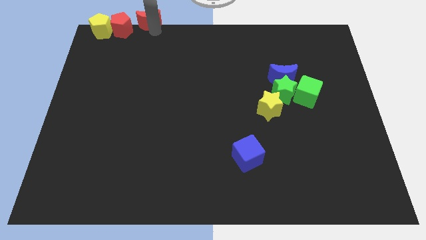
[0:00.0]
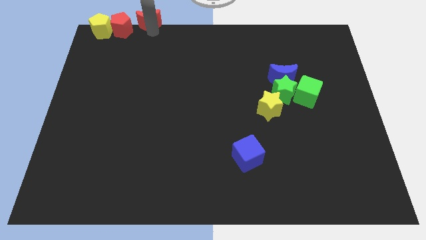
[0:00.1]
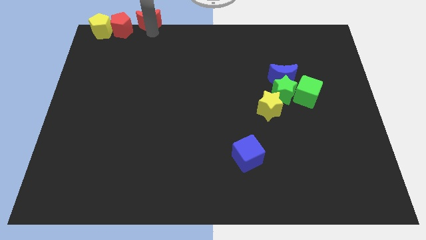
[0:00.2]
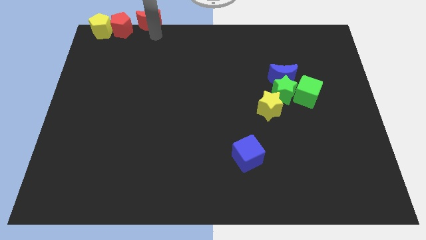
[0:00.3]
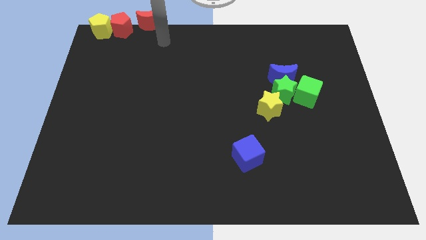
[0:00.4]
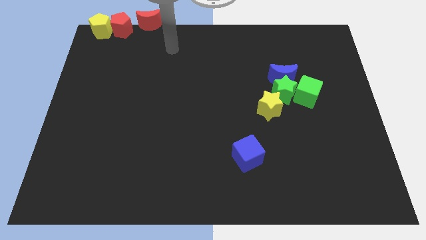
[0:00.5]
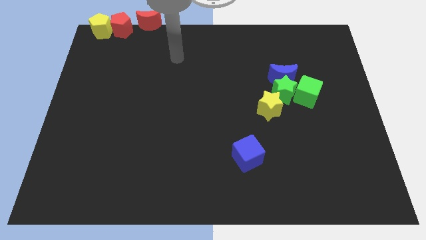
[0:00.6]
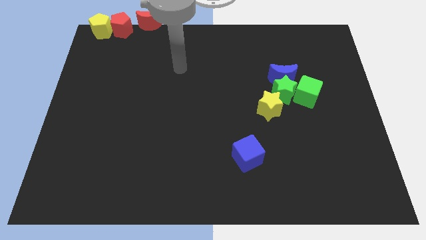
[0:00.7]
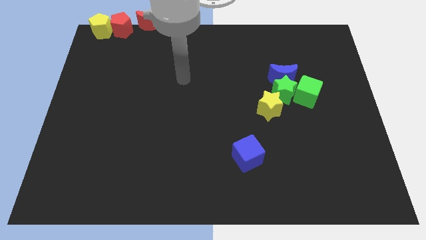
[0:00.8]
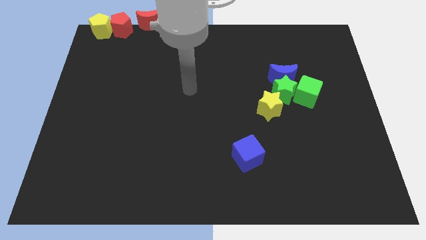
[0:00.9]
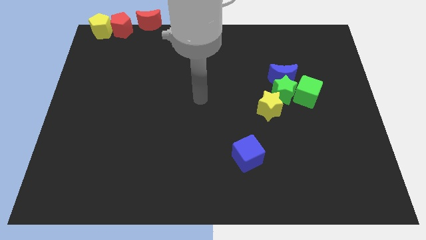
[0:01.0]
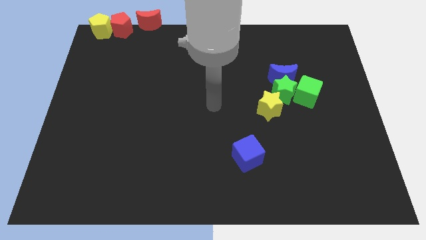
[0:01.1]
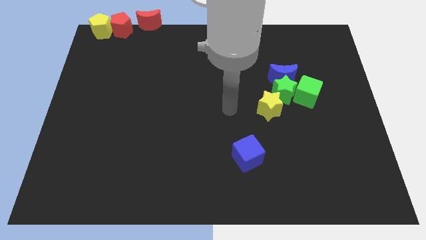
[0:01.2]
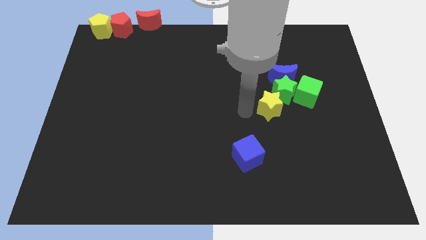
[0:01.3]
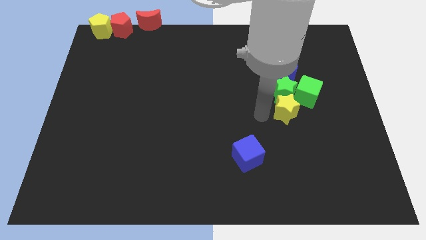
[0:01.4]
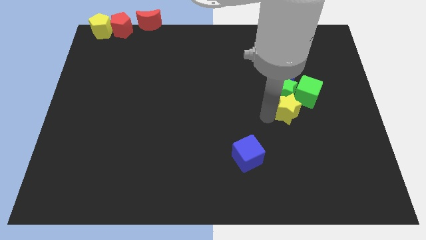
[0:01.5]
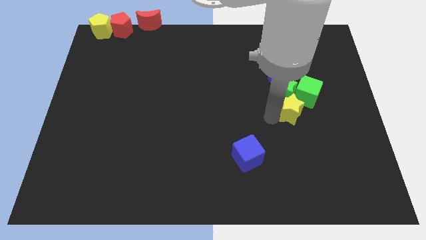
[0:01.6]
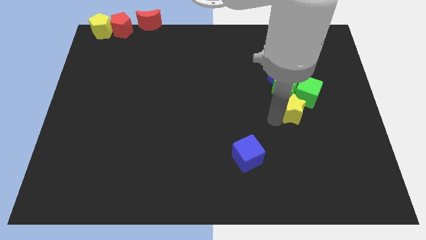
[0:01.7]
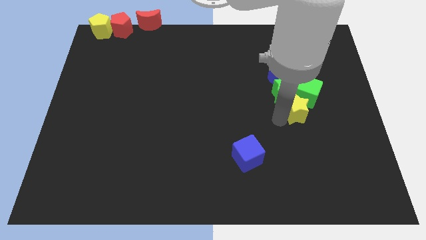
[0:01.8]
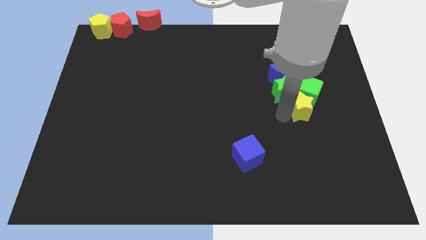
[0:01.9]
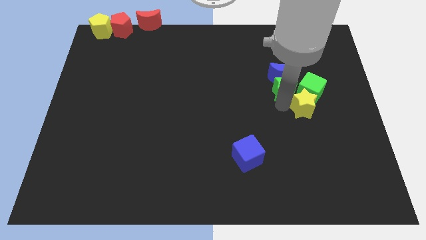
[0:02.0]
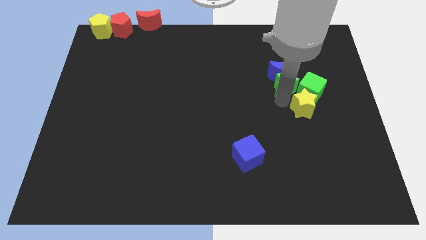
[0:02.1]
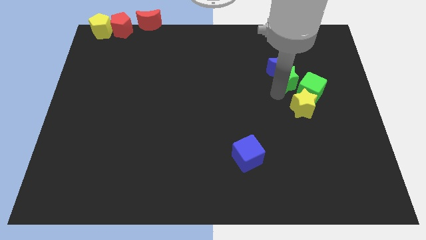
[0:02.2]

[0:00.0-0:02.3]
place yellow star to the bottom of green cube

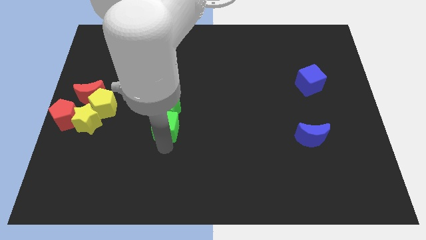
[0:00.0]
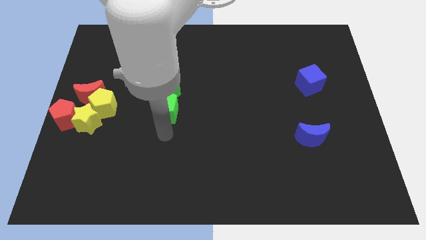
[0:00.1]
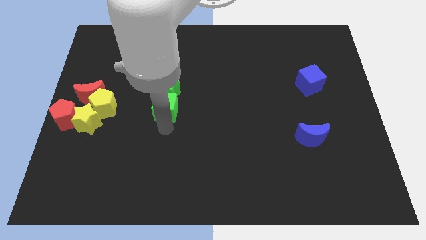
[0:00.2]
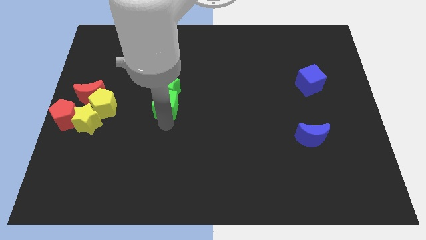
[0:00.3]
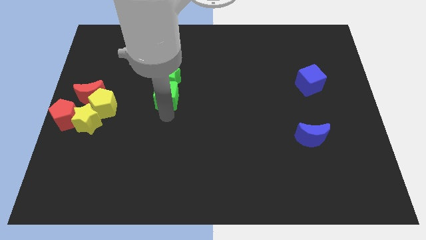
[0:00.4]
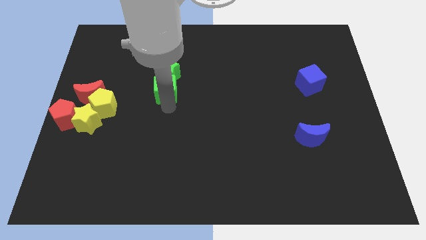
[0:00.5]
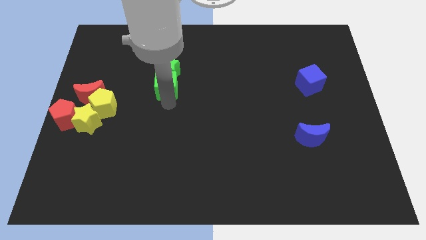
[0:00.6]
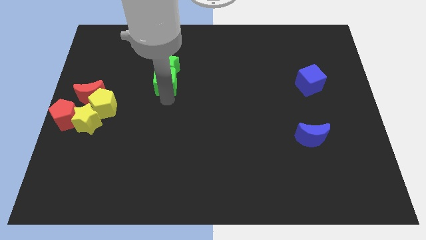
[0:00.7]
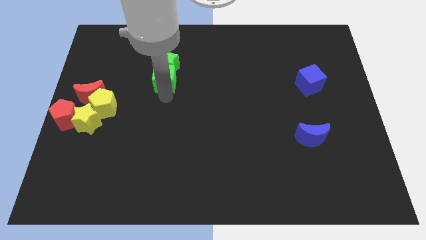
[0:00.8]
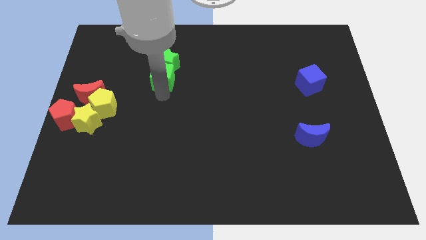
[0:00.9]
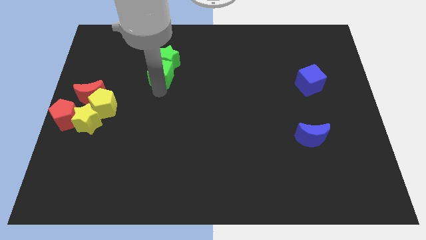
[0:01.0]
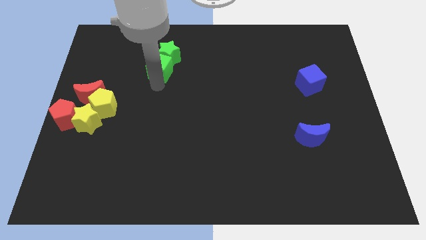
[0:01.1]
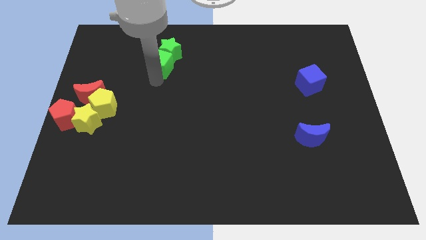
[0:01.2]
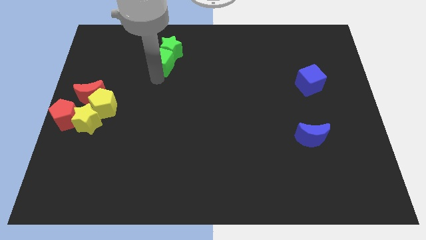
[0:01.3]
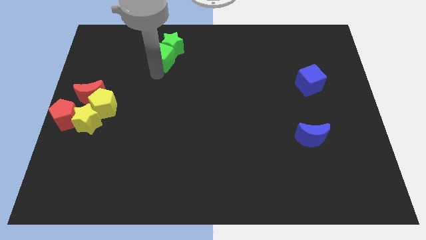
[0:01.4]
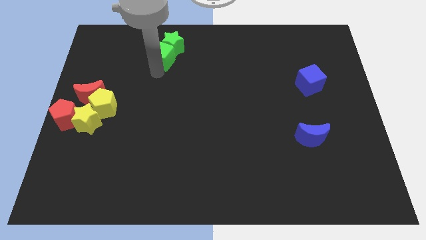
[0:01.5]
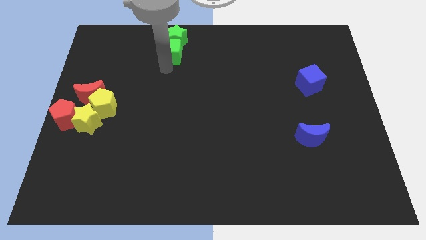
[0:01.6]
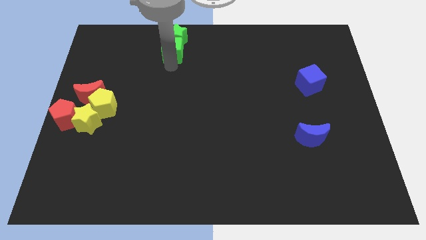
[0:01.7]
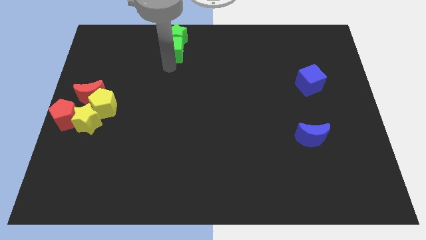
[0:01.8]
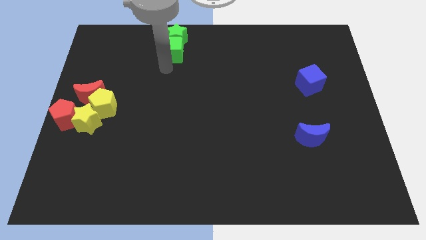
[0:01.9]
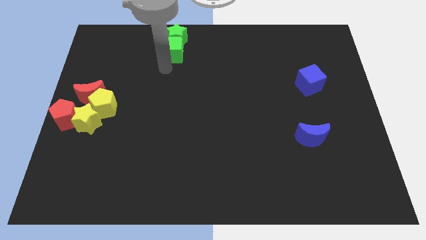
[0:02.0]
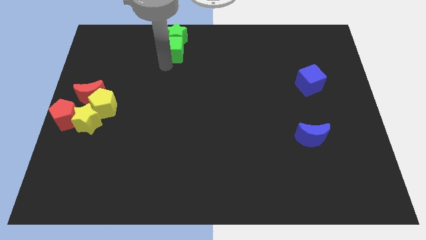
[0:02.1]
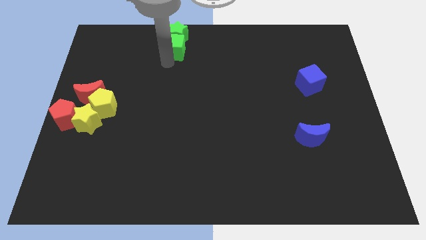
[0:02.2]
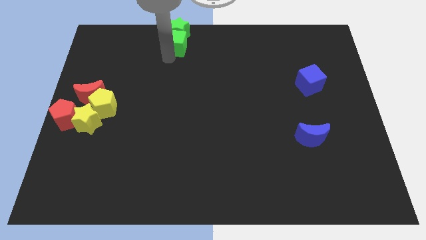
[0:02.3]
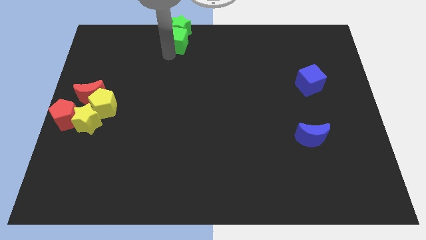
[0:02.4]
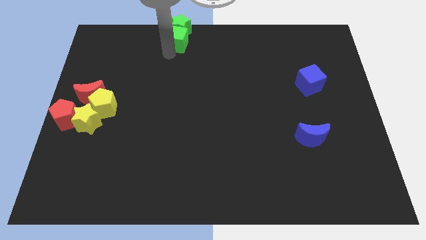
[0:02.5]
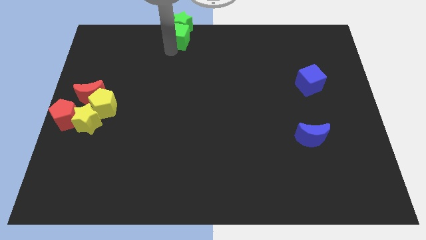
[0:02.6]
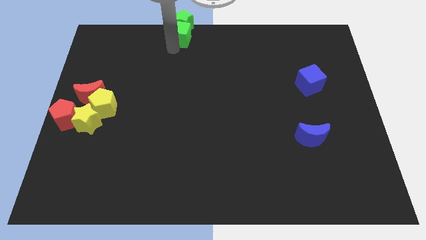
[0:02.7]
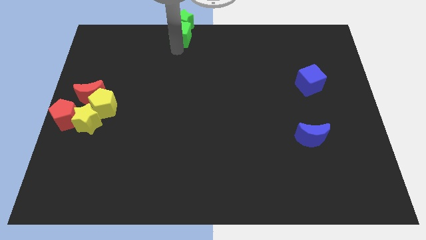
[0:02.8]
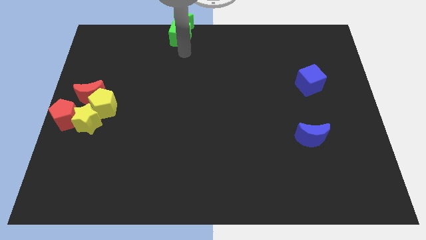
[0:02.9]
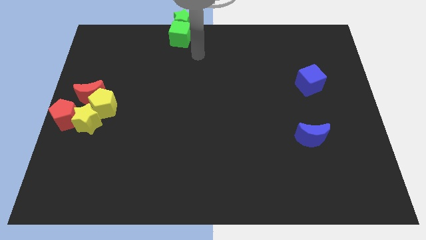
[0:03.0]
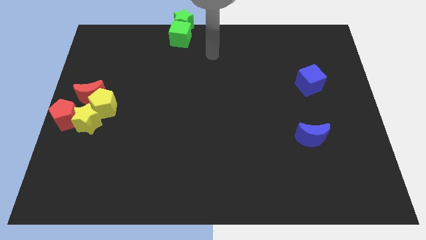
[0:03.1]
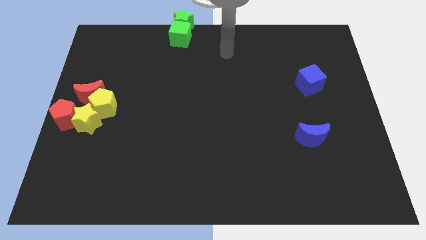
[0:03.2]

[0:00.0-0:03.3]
push the green cube and green star upward

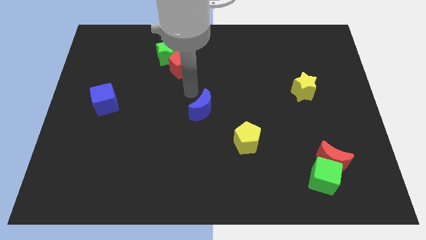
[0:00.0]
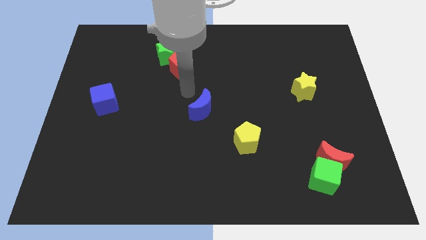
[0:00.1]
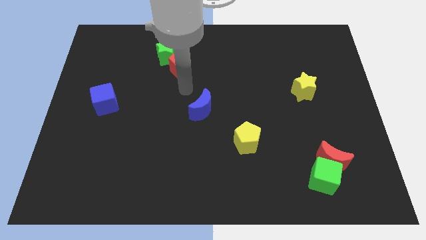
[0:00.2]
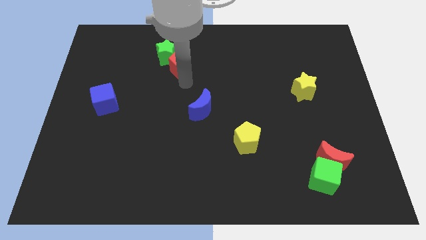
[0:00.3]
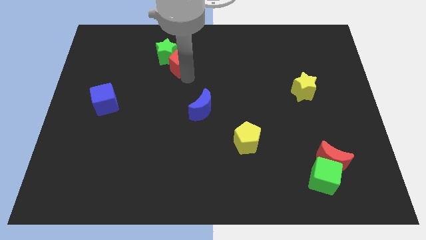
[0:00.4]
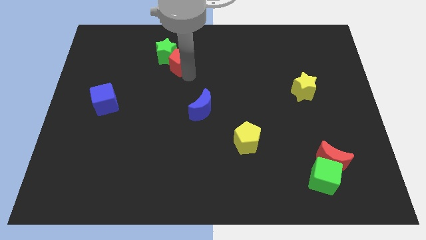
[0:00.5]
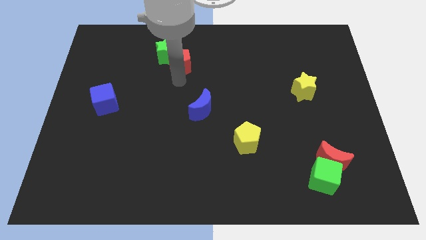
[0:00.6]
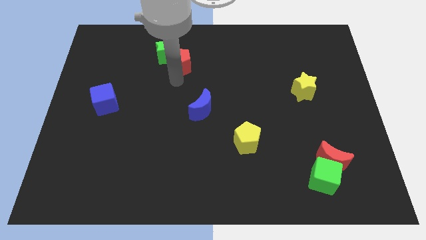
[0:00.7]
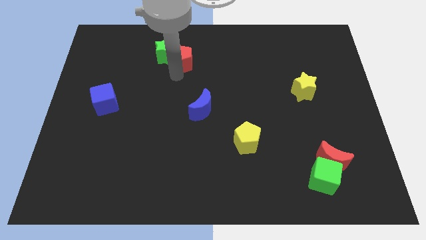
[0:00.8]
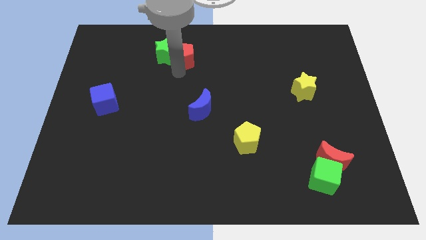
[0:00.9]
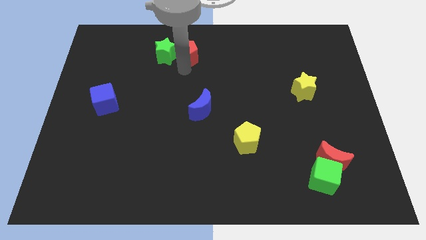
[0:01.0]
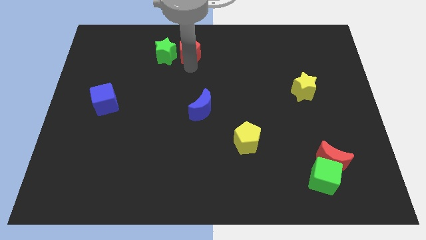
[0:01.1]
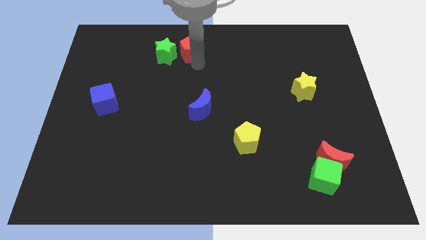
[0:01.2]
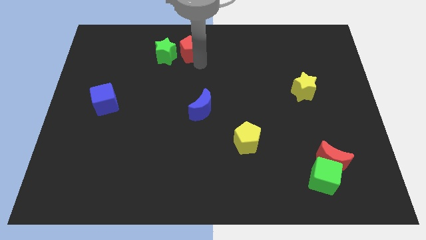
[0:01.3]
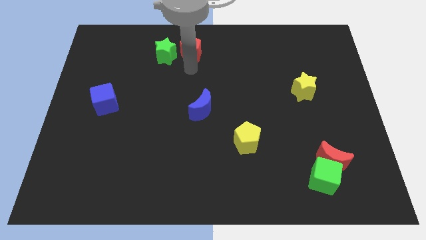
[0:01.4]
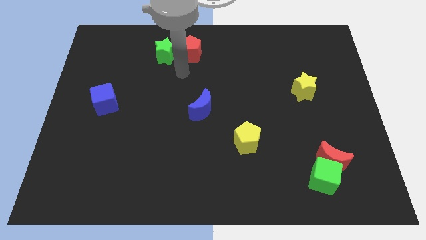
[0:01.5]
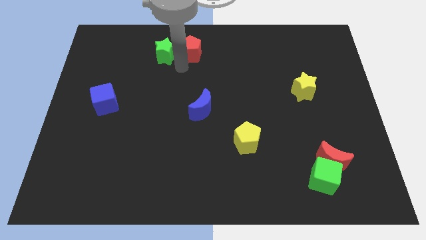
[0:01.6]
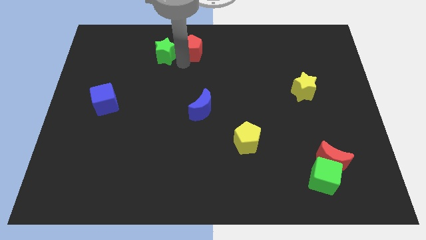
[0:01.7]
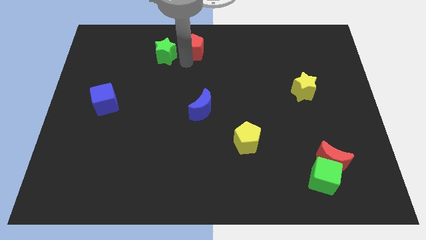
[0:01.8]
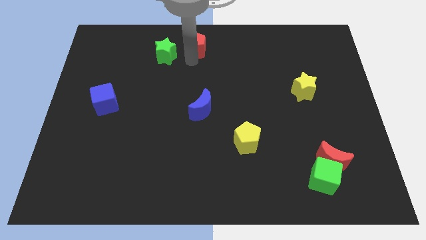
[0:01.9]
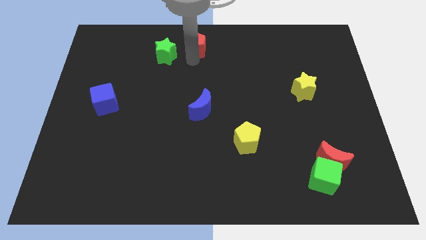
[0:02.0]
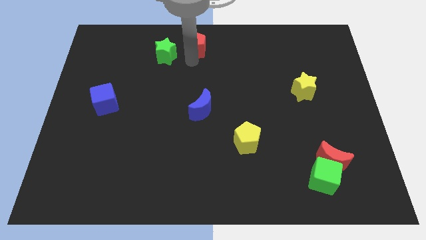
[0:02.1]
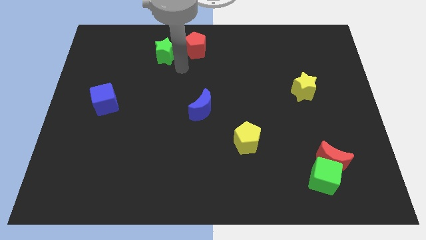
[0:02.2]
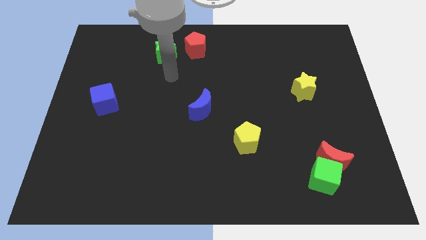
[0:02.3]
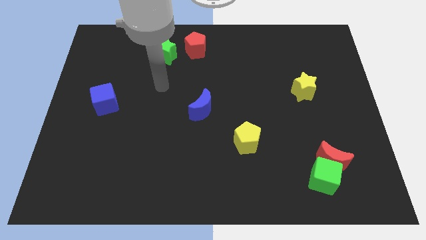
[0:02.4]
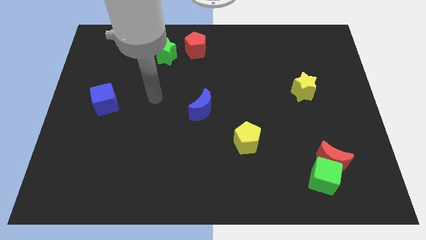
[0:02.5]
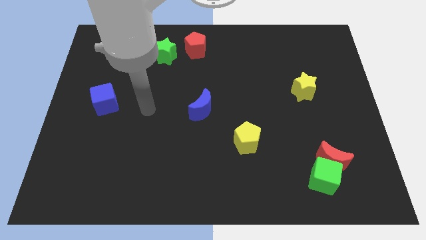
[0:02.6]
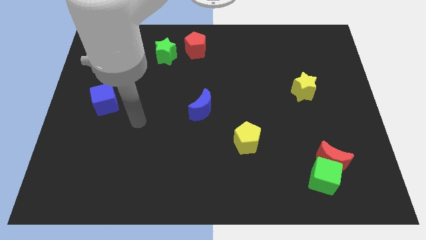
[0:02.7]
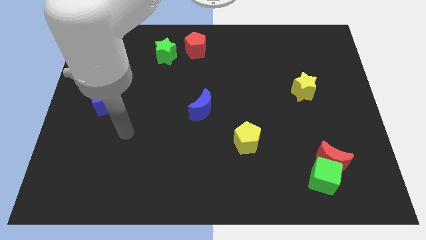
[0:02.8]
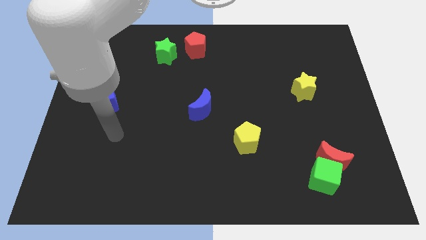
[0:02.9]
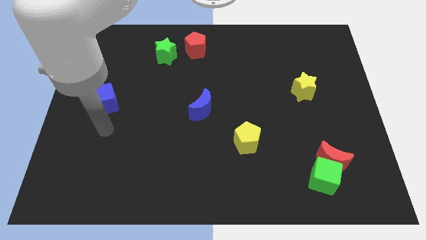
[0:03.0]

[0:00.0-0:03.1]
move red pentagon vertically above blue crescent

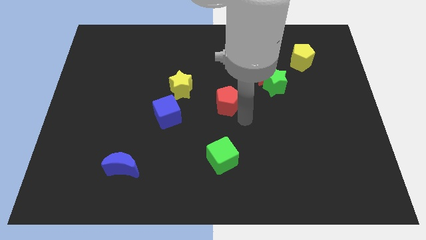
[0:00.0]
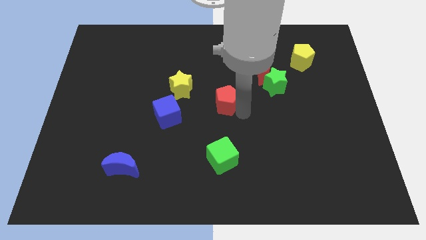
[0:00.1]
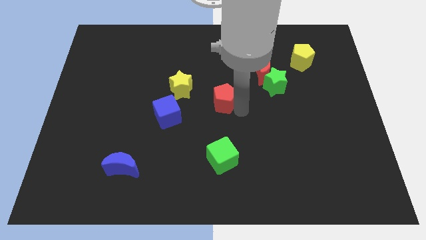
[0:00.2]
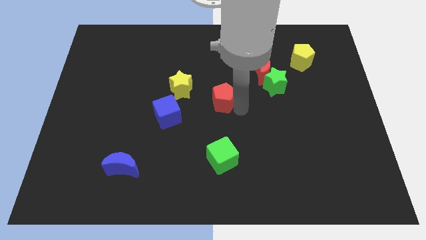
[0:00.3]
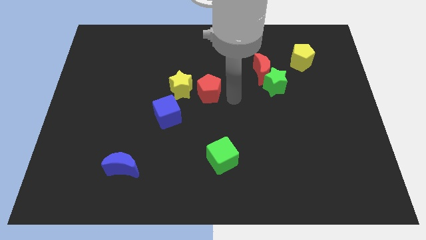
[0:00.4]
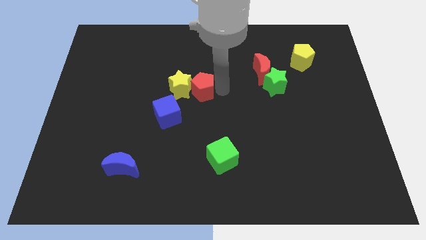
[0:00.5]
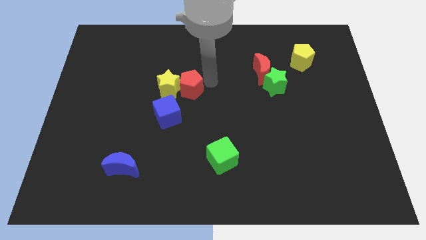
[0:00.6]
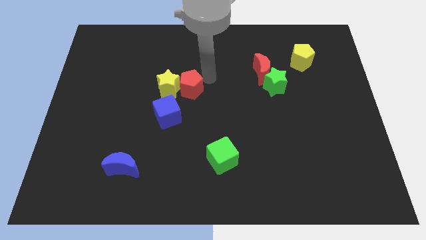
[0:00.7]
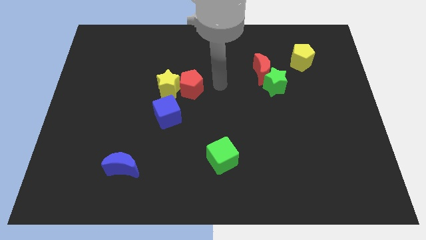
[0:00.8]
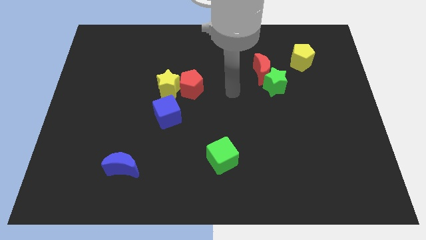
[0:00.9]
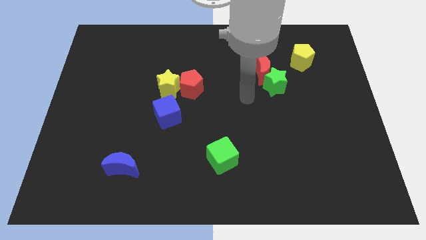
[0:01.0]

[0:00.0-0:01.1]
push the red pentagon into the right side of the yellow star
